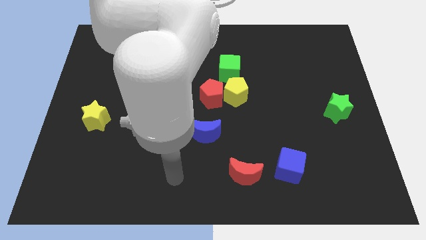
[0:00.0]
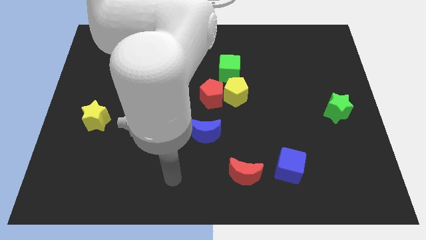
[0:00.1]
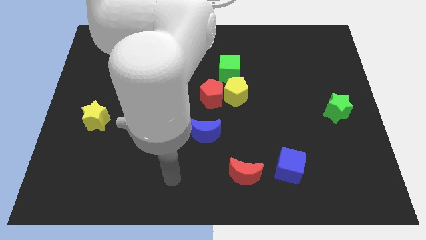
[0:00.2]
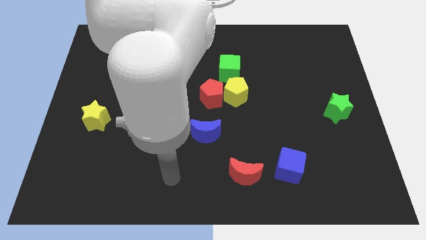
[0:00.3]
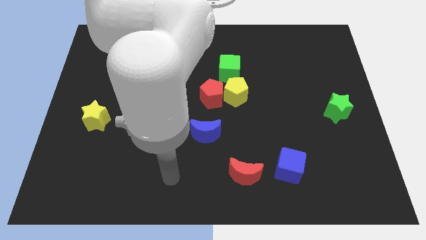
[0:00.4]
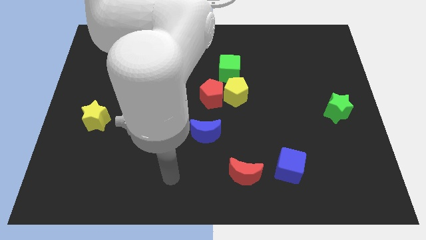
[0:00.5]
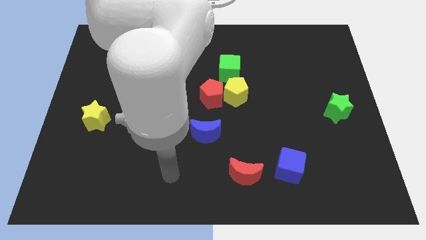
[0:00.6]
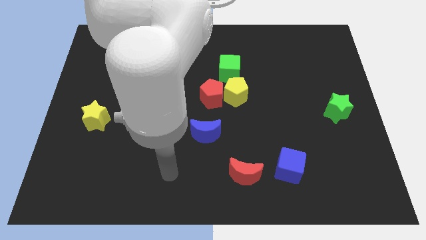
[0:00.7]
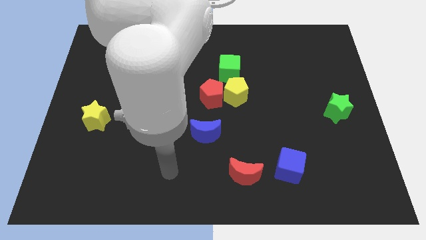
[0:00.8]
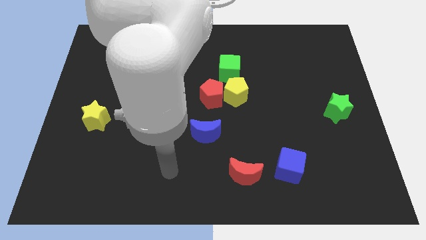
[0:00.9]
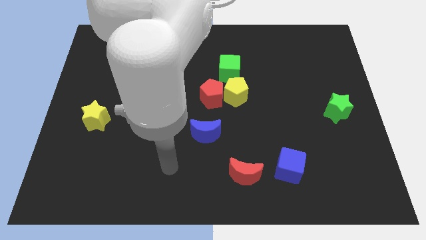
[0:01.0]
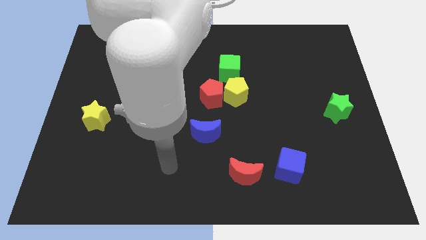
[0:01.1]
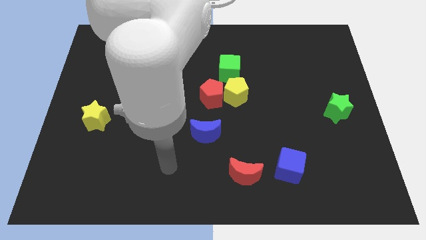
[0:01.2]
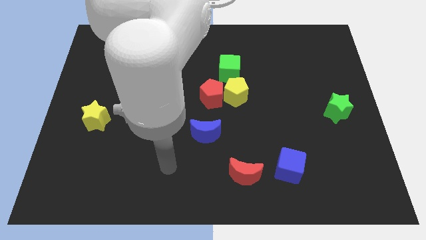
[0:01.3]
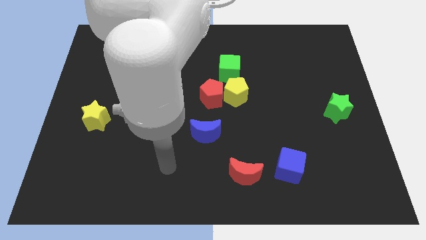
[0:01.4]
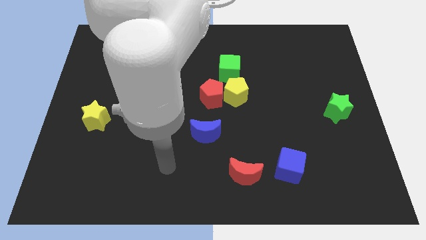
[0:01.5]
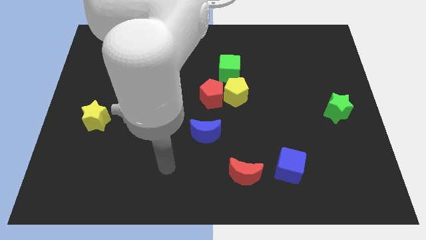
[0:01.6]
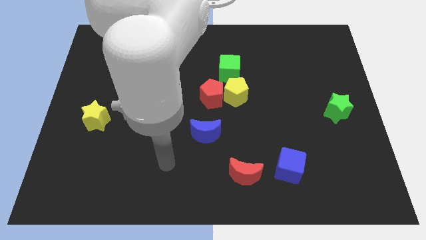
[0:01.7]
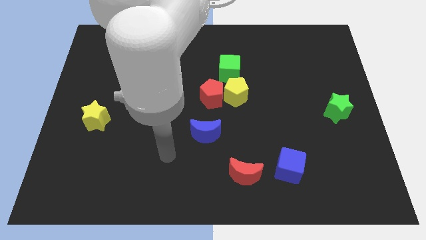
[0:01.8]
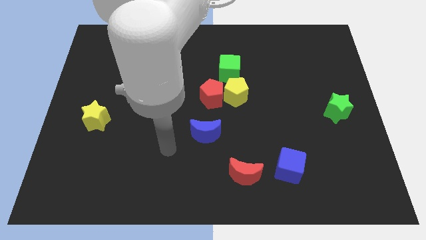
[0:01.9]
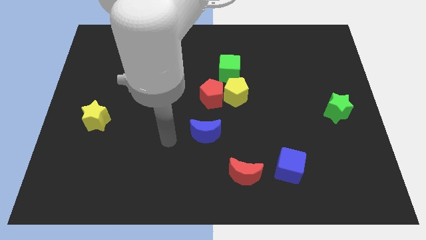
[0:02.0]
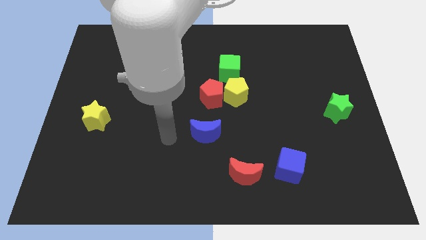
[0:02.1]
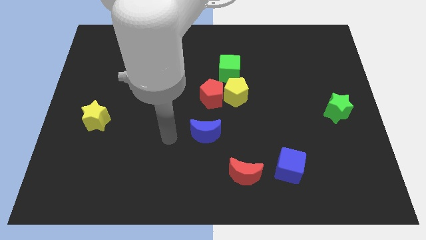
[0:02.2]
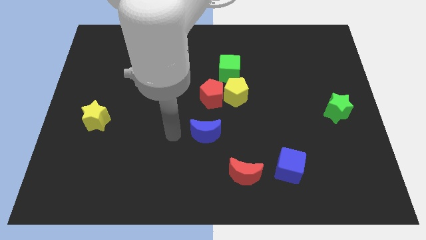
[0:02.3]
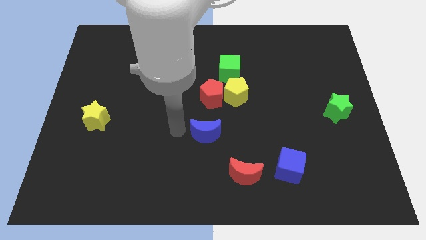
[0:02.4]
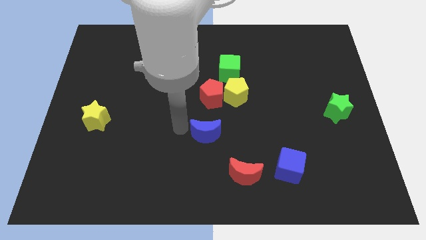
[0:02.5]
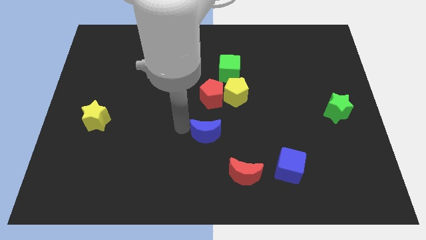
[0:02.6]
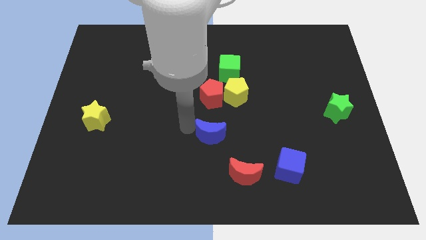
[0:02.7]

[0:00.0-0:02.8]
point your arm at the left of the blue crescent

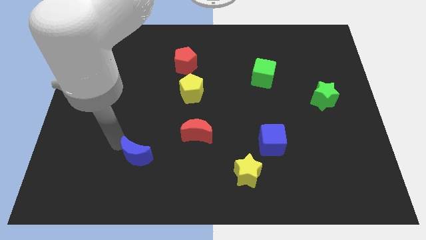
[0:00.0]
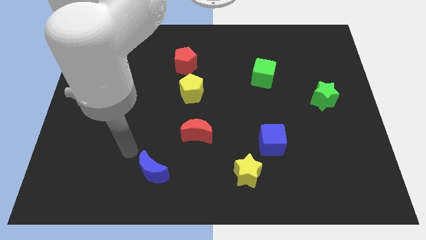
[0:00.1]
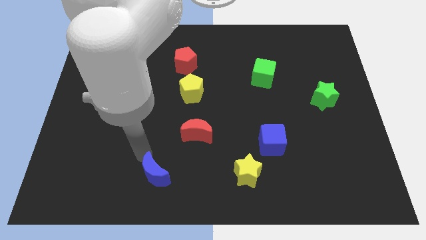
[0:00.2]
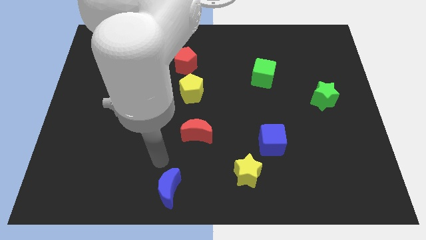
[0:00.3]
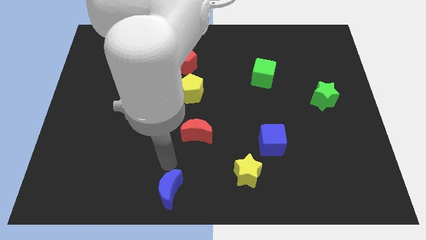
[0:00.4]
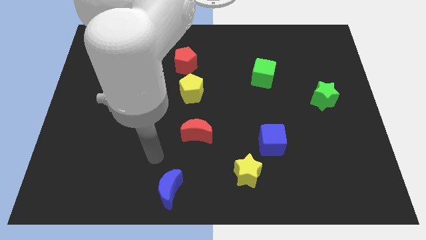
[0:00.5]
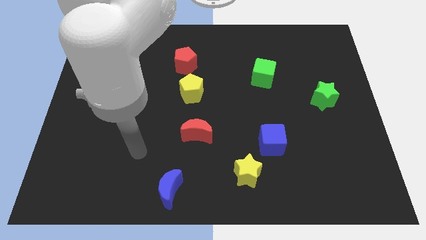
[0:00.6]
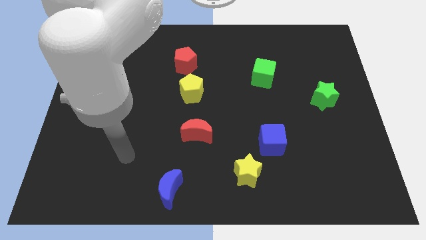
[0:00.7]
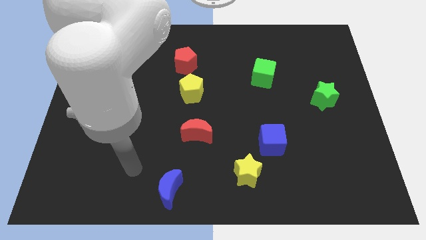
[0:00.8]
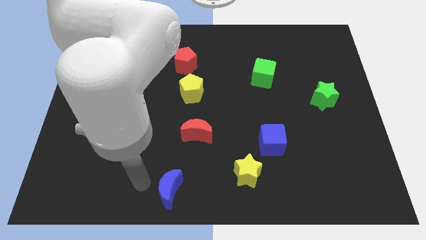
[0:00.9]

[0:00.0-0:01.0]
place the blue moon left to the yellow star

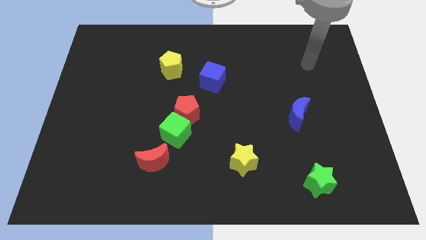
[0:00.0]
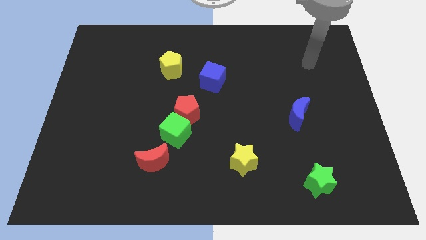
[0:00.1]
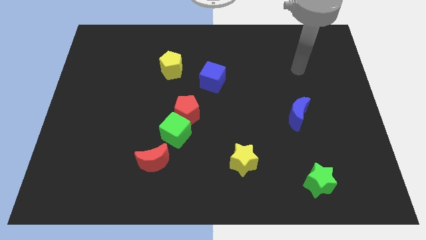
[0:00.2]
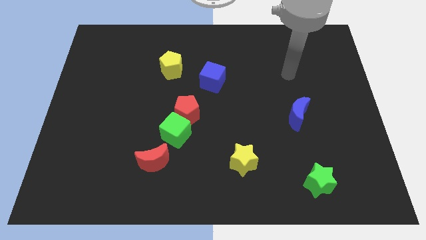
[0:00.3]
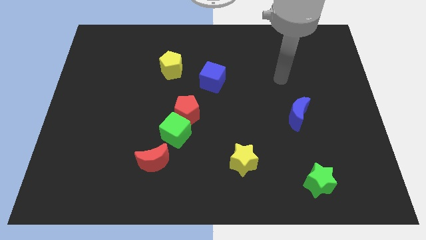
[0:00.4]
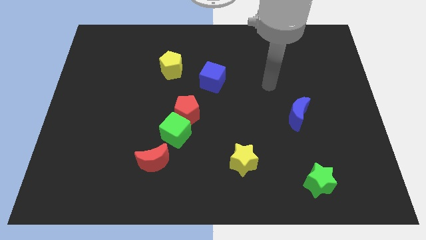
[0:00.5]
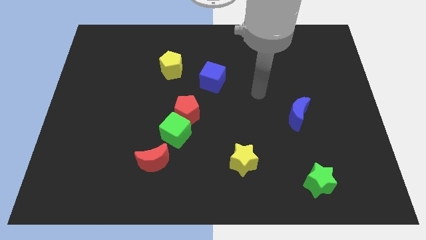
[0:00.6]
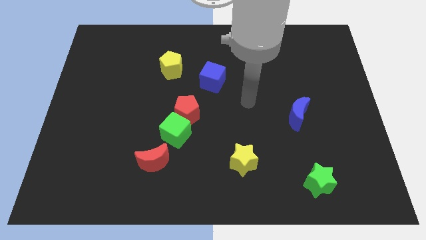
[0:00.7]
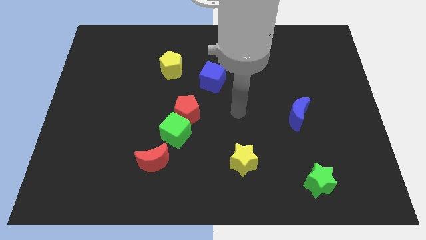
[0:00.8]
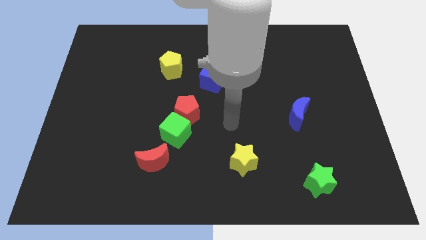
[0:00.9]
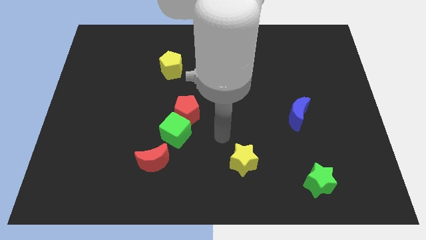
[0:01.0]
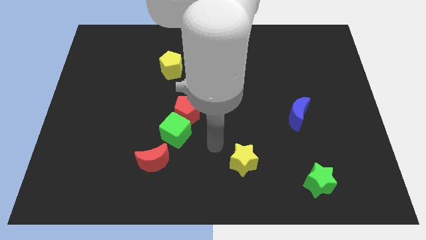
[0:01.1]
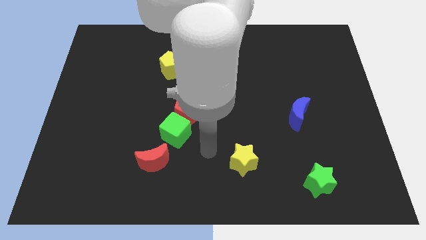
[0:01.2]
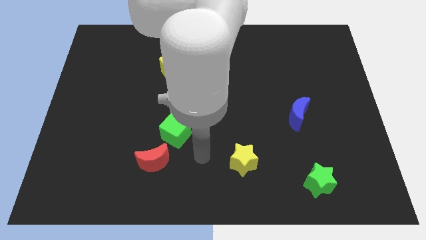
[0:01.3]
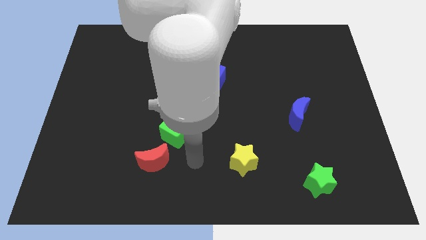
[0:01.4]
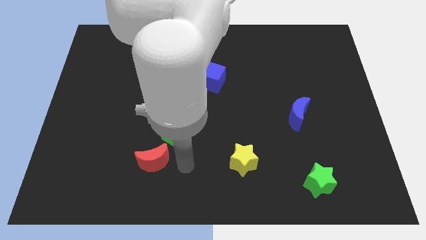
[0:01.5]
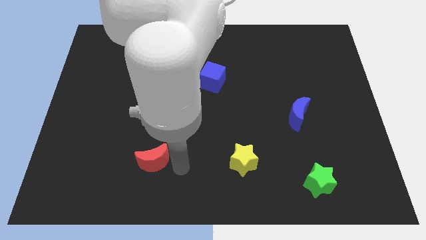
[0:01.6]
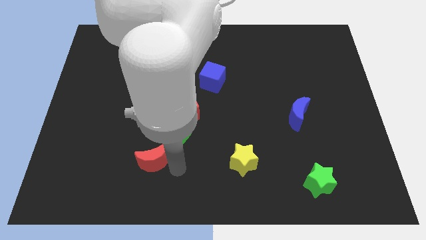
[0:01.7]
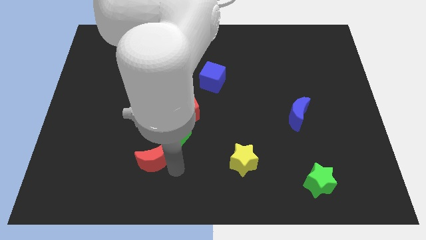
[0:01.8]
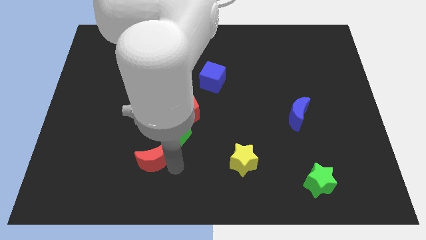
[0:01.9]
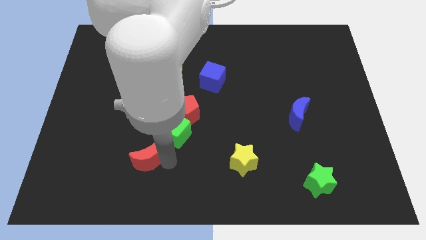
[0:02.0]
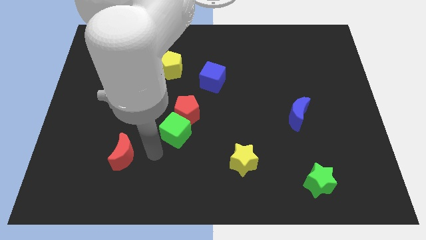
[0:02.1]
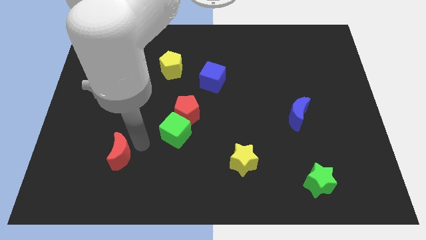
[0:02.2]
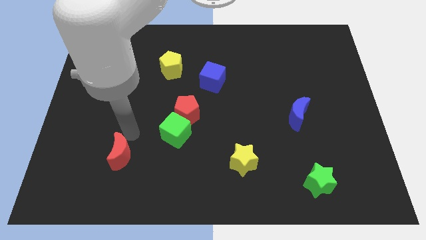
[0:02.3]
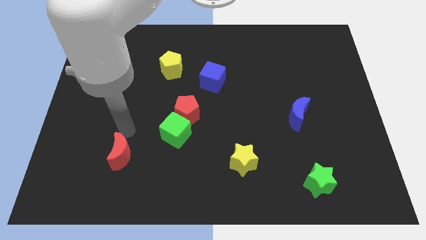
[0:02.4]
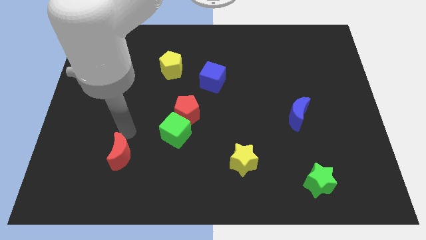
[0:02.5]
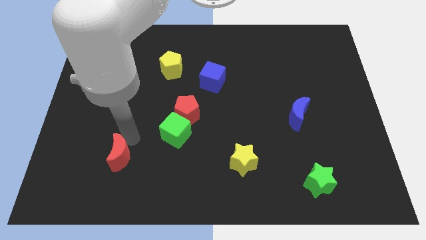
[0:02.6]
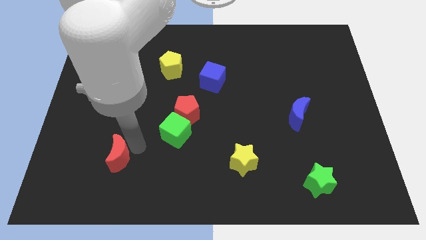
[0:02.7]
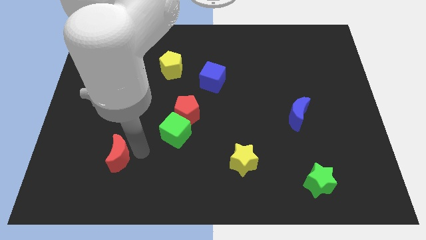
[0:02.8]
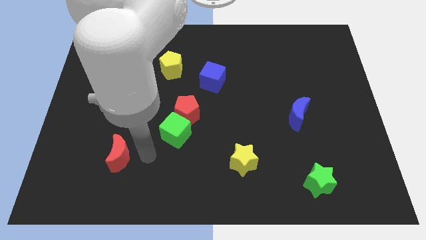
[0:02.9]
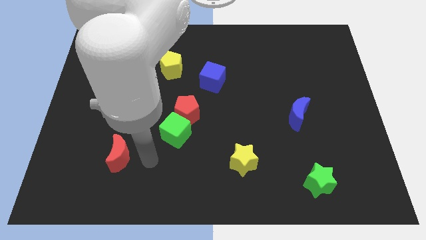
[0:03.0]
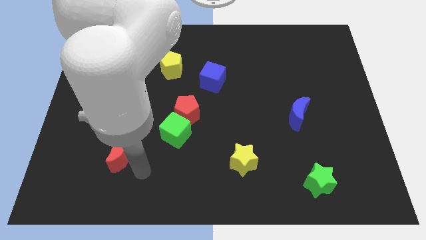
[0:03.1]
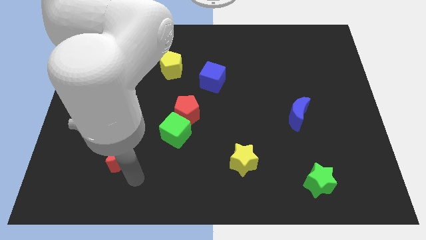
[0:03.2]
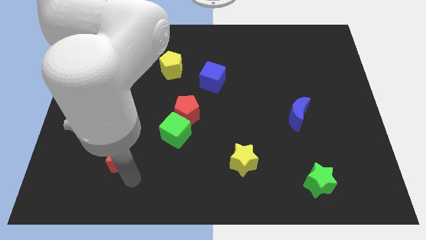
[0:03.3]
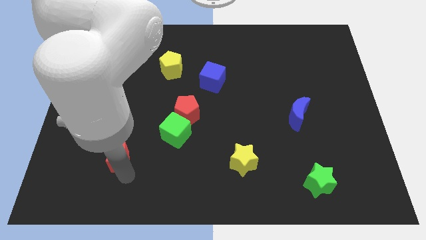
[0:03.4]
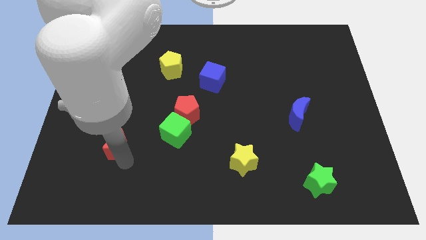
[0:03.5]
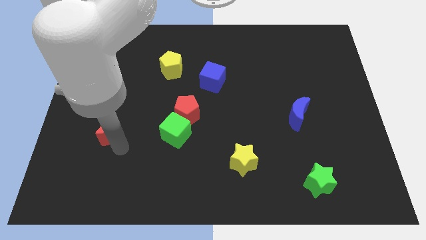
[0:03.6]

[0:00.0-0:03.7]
move the red crescent horizontally to the left side of the green cube

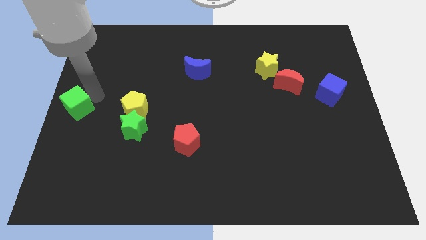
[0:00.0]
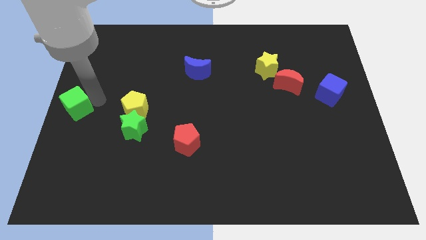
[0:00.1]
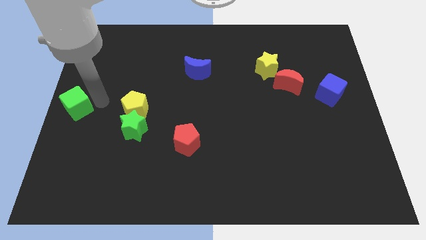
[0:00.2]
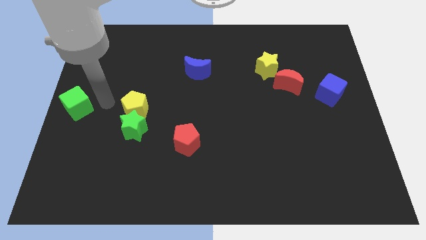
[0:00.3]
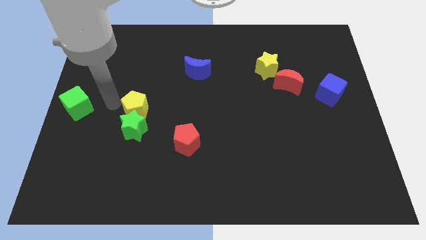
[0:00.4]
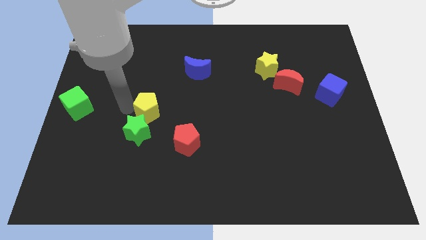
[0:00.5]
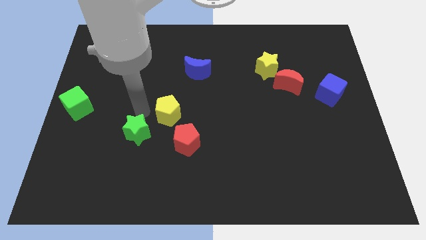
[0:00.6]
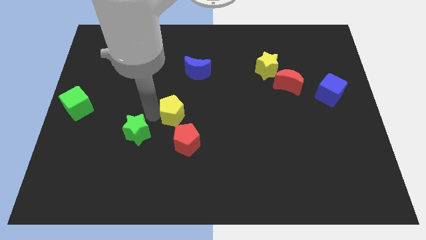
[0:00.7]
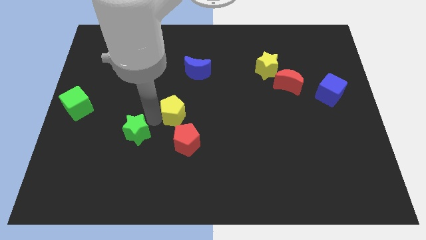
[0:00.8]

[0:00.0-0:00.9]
separate the yellow pentagon and green star

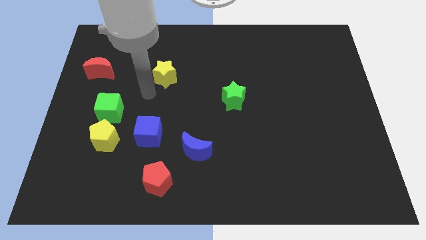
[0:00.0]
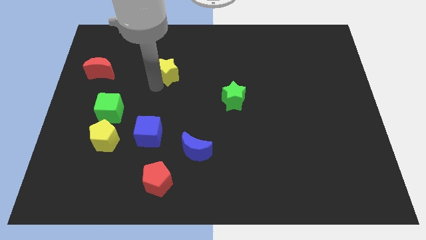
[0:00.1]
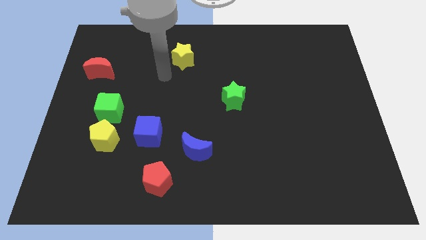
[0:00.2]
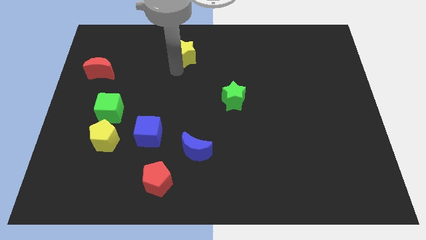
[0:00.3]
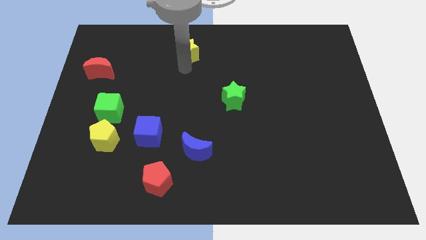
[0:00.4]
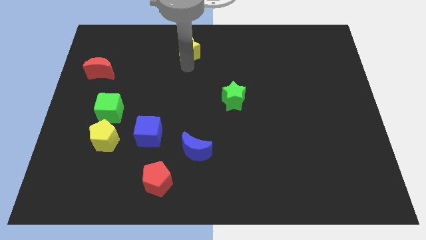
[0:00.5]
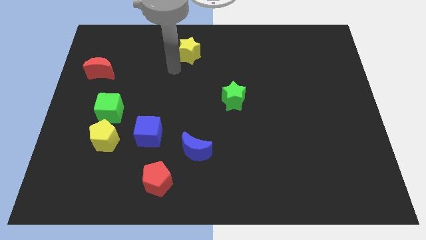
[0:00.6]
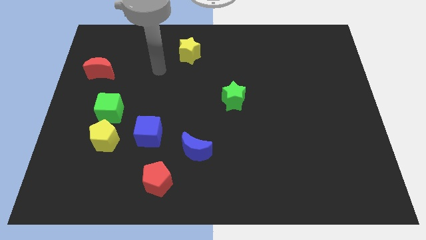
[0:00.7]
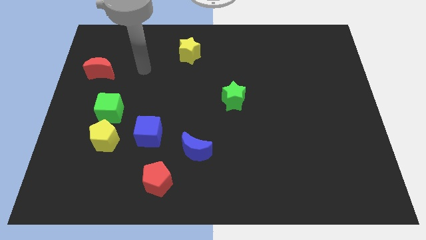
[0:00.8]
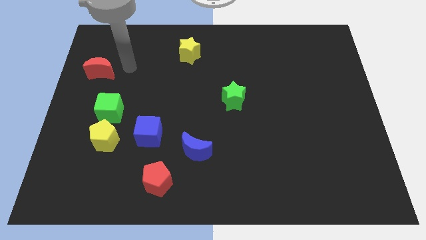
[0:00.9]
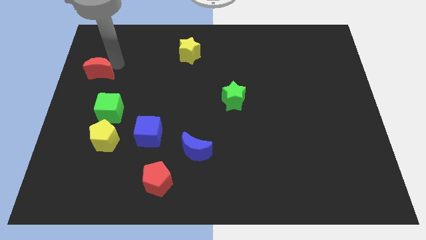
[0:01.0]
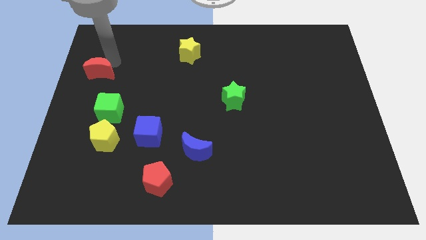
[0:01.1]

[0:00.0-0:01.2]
push yellow star towards top center
